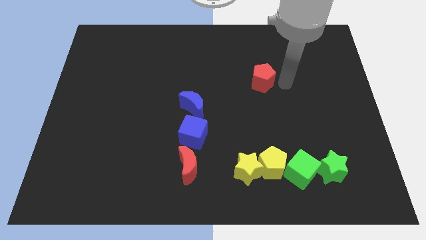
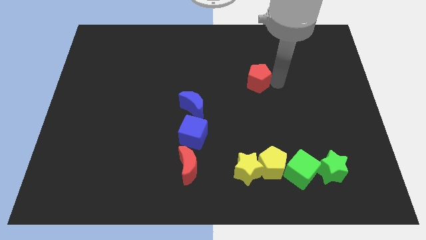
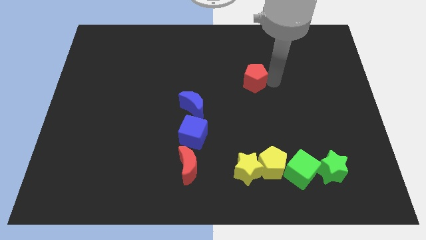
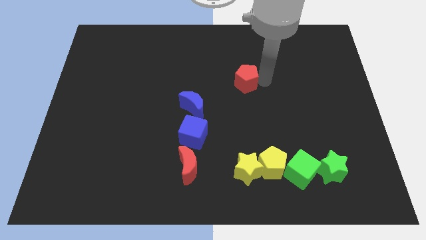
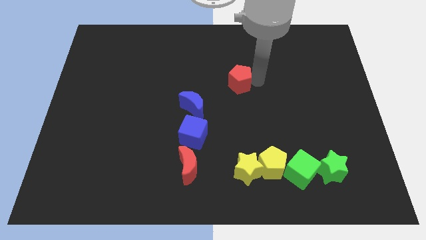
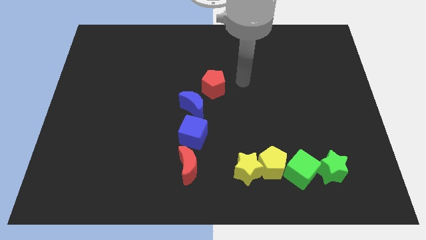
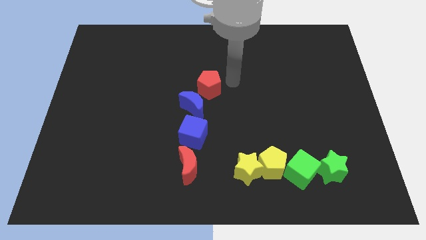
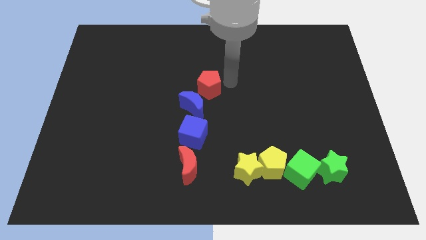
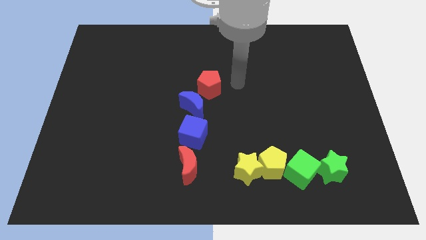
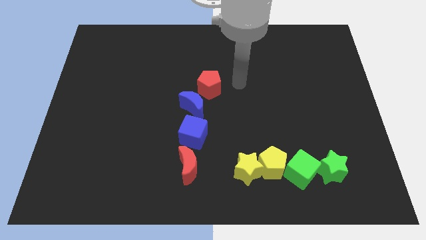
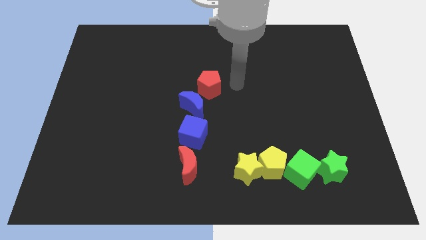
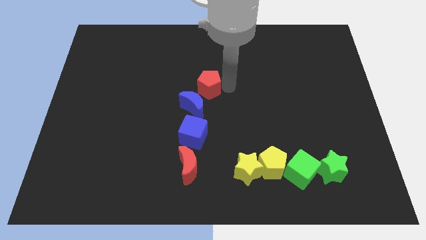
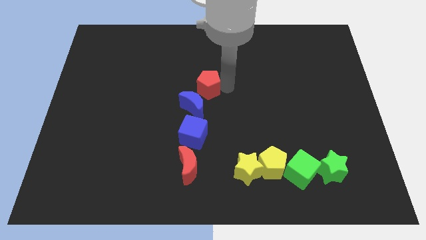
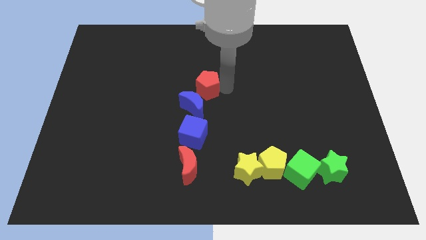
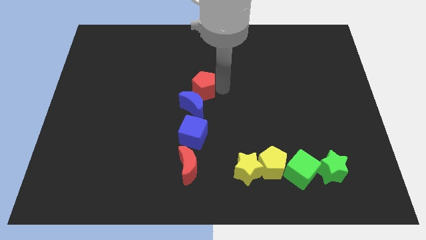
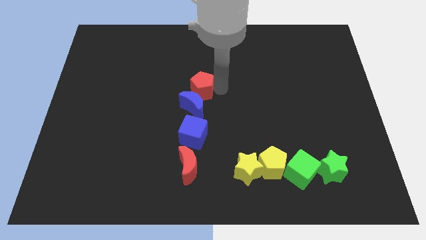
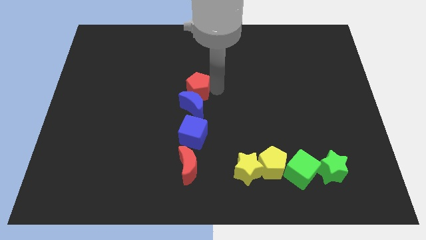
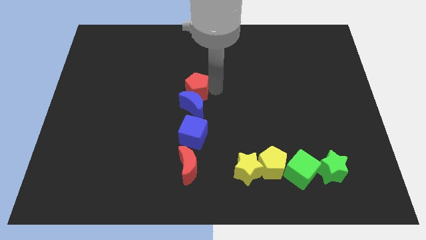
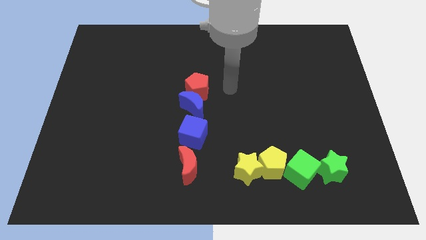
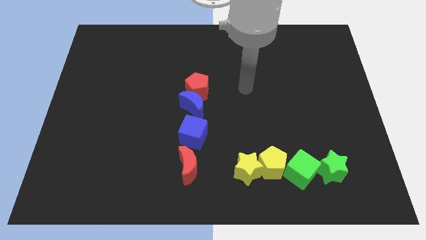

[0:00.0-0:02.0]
place the red pentagon above the blue moon

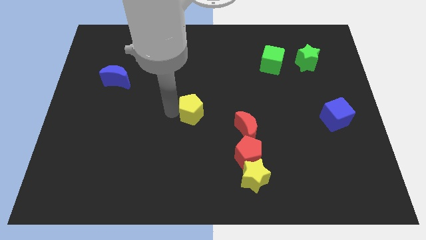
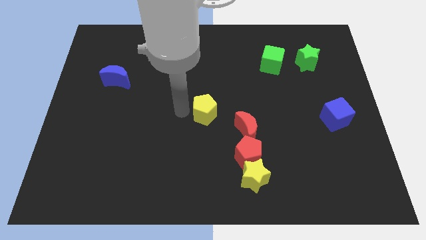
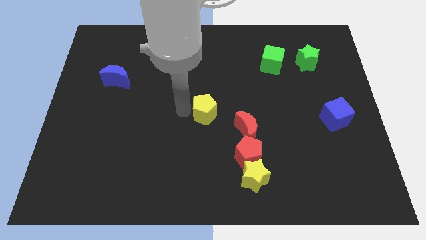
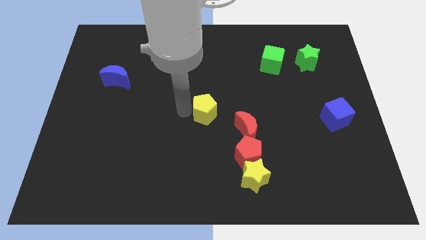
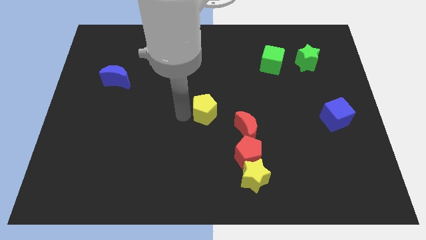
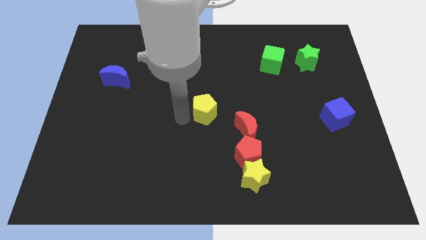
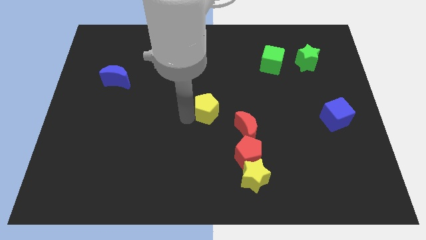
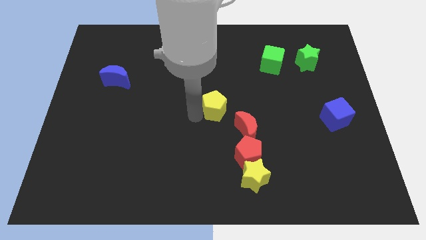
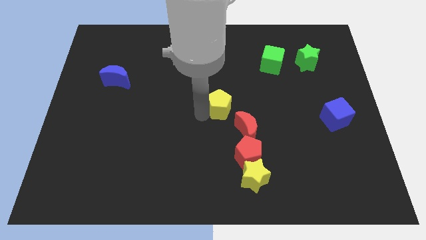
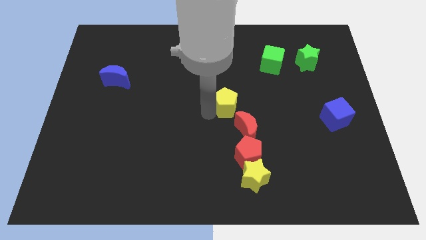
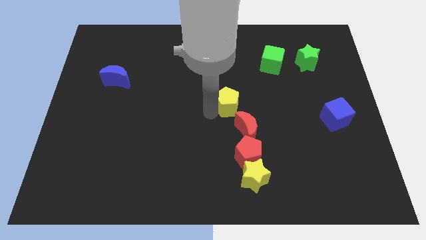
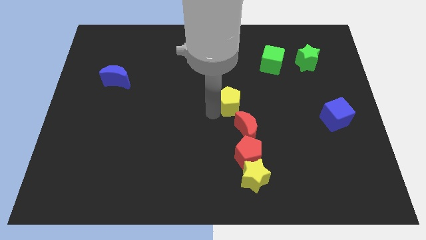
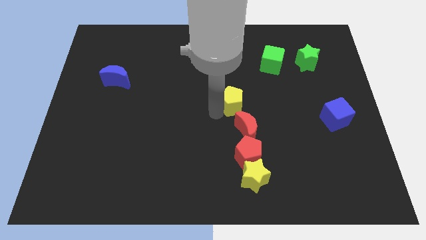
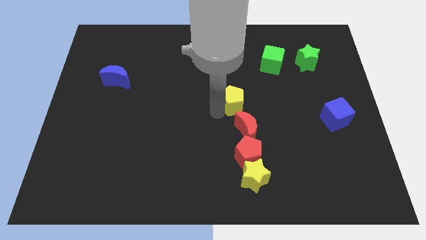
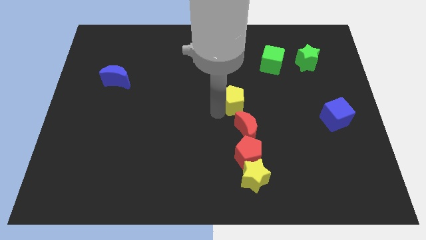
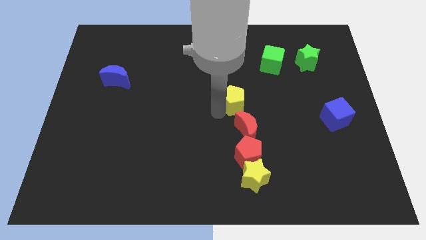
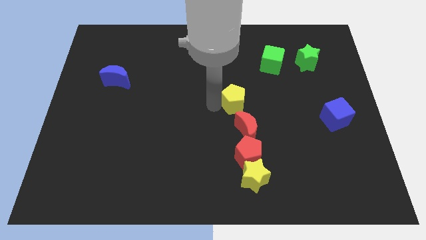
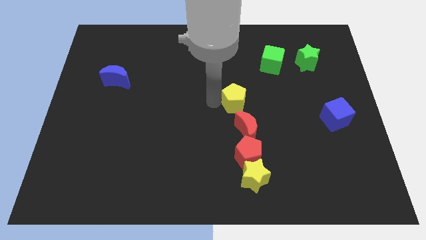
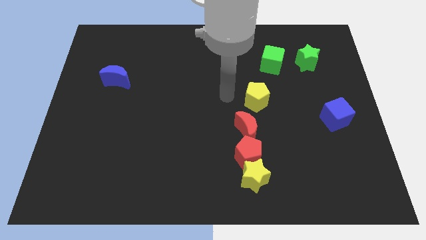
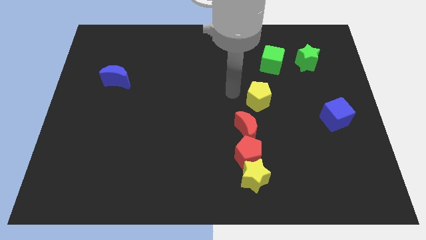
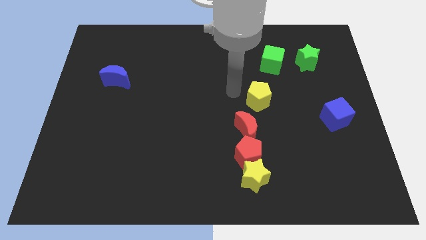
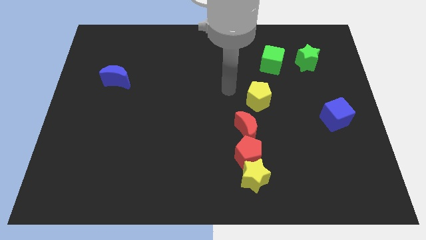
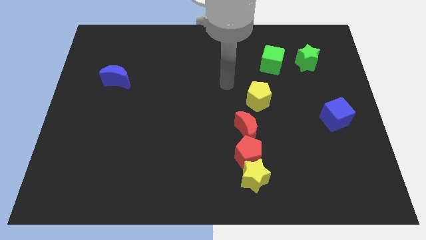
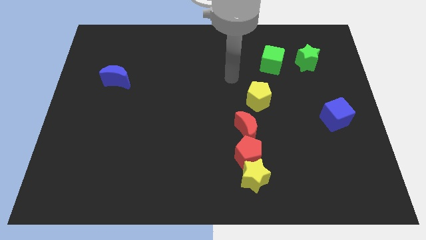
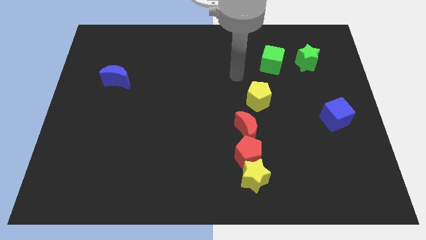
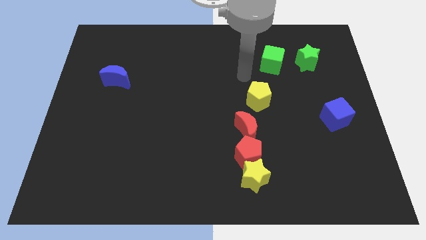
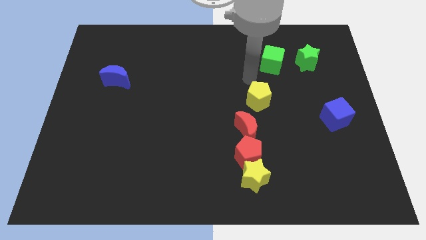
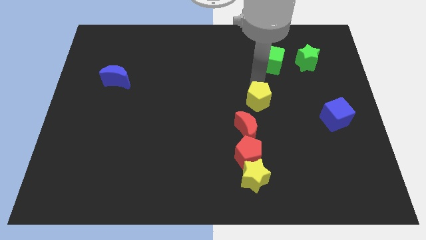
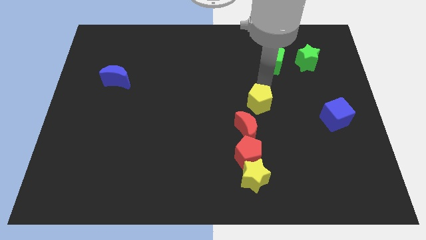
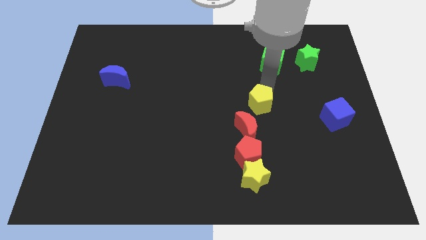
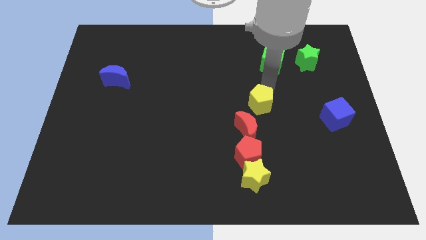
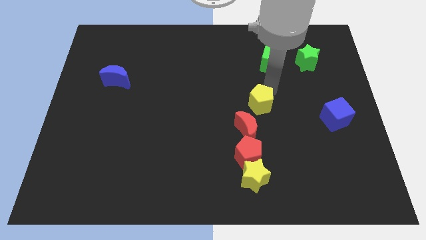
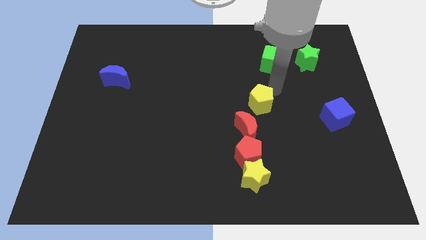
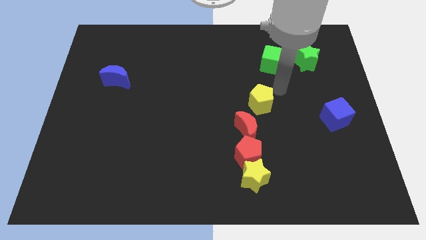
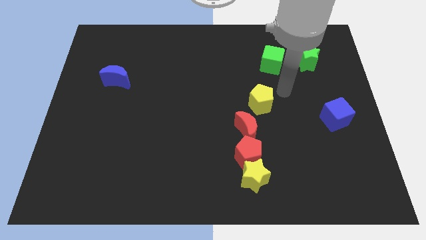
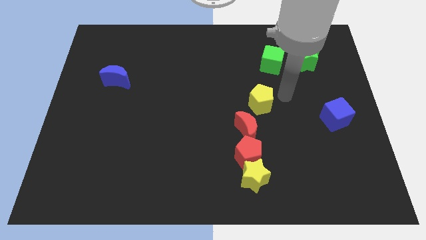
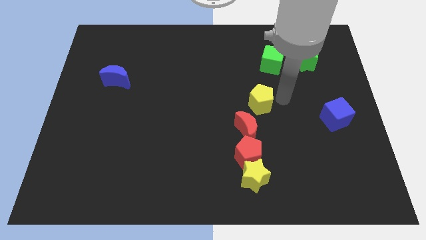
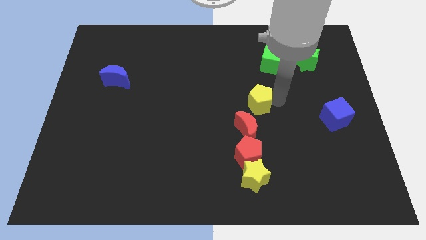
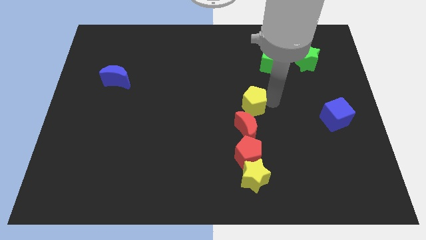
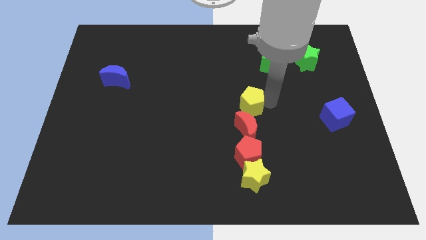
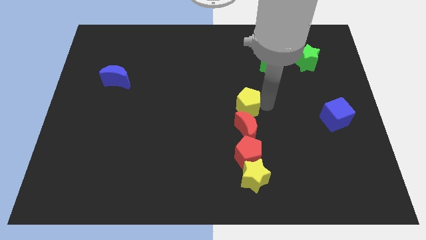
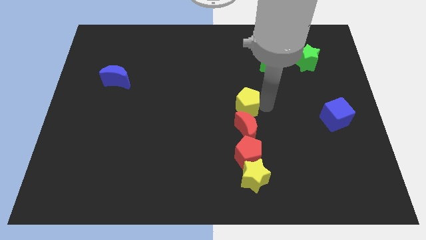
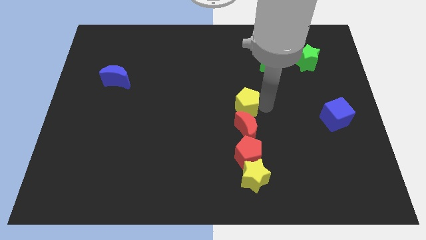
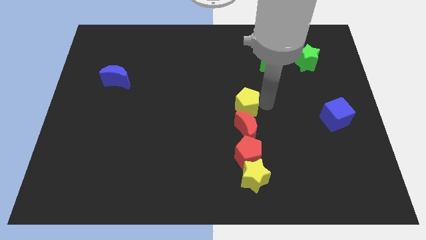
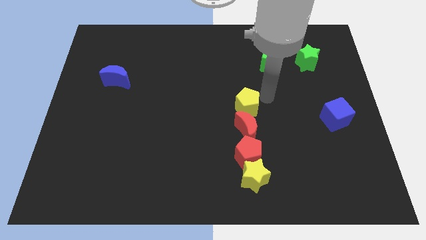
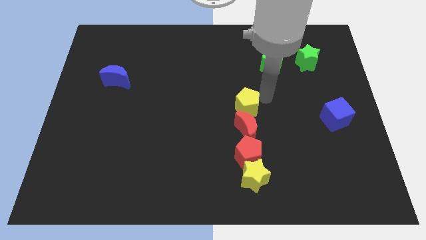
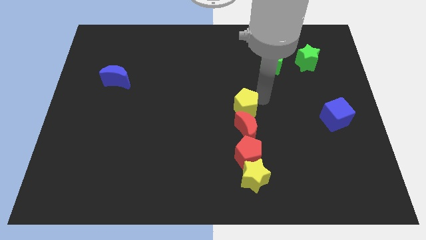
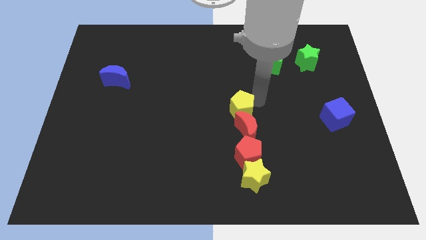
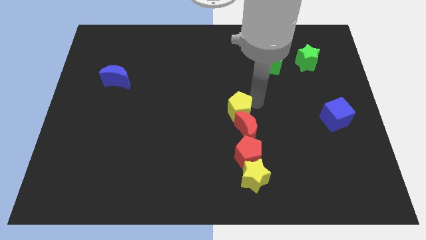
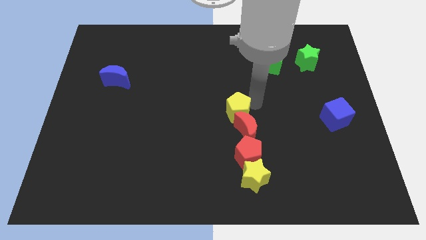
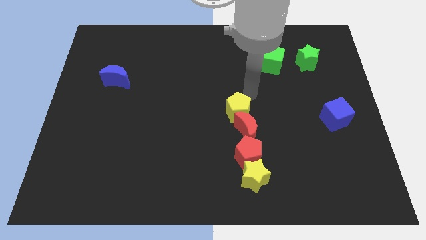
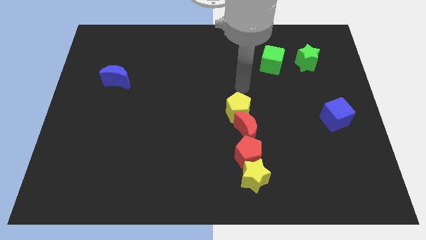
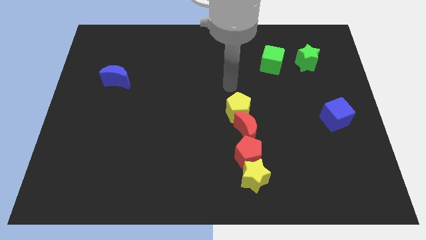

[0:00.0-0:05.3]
move the yellow pentagon into red moon

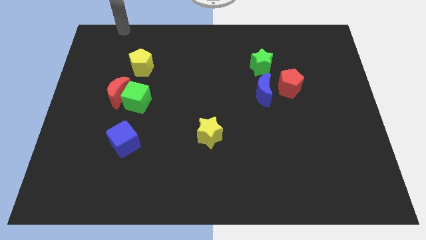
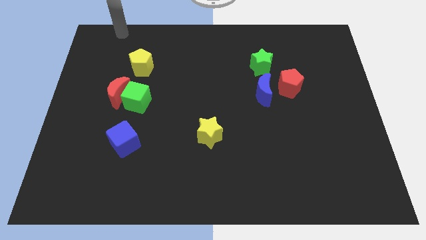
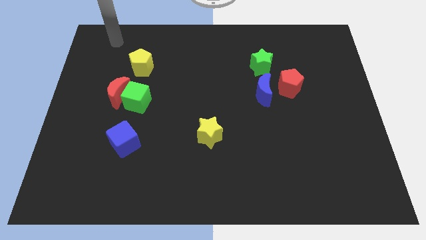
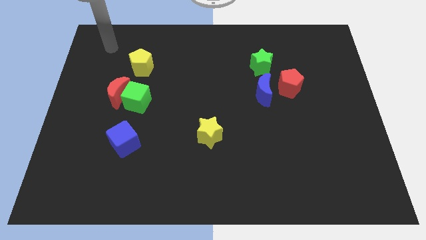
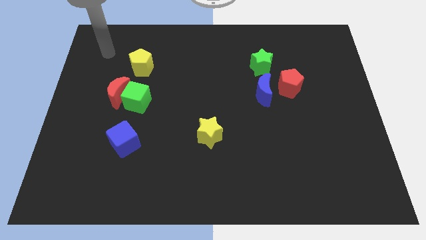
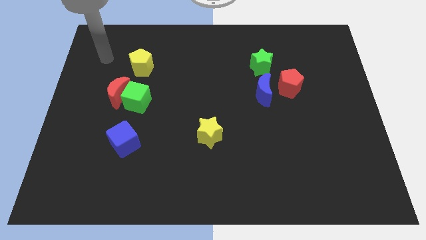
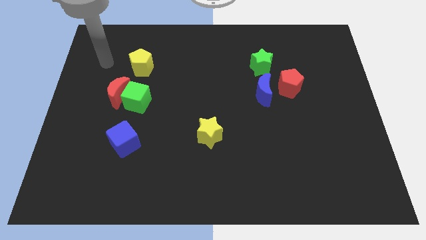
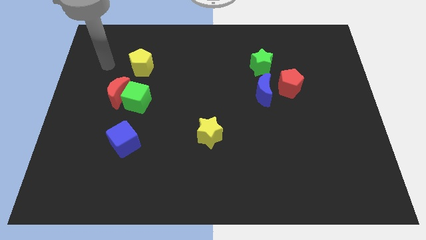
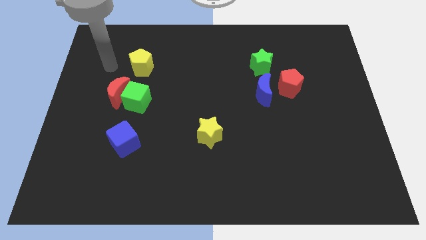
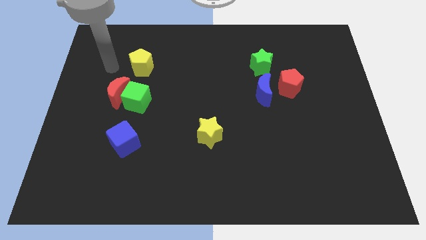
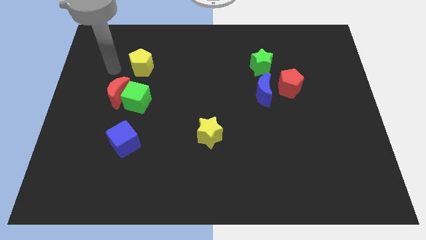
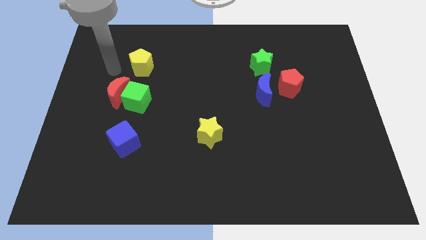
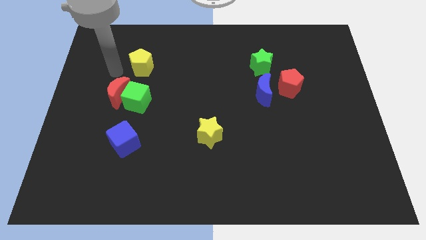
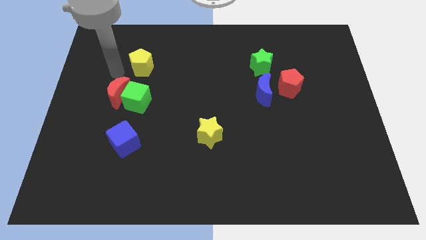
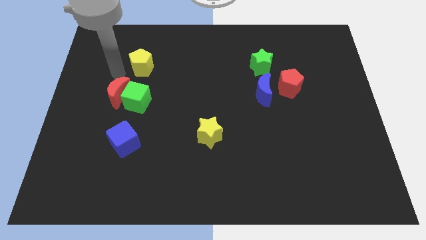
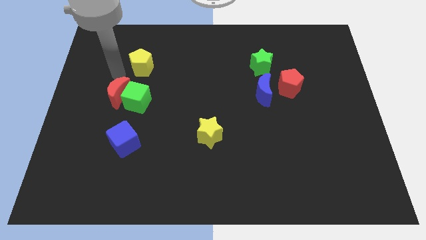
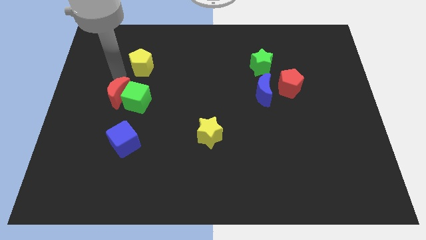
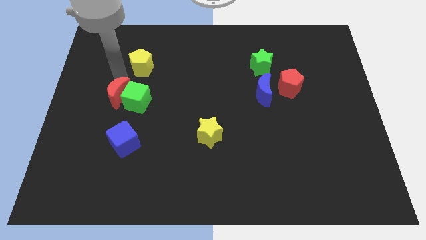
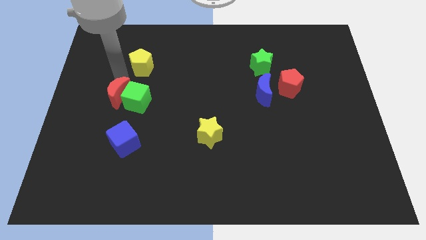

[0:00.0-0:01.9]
move your arm to the top of red moon
